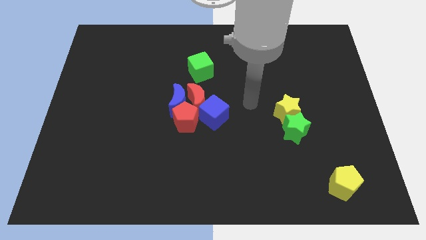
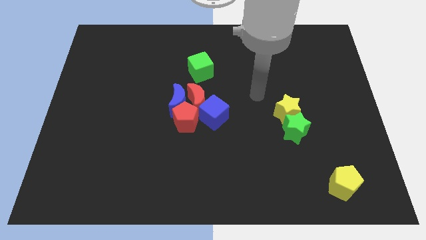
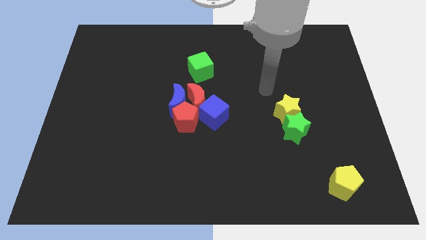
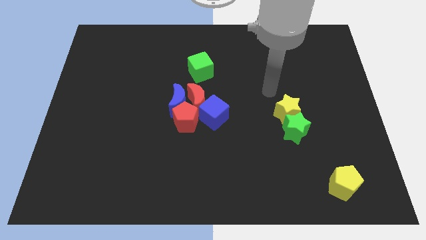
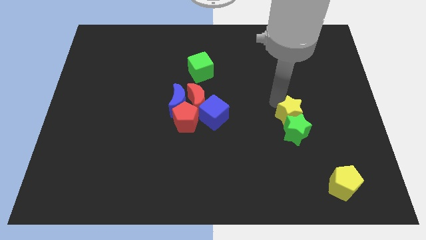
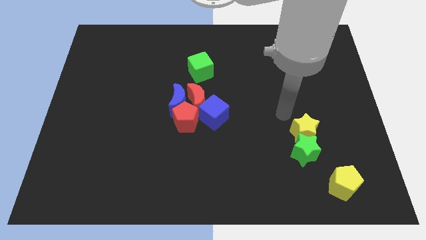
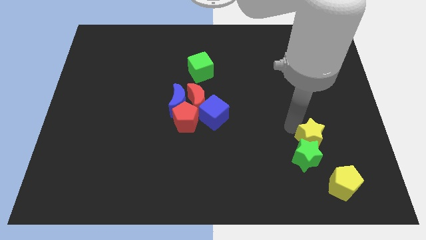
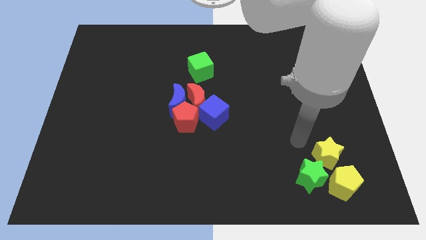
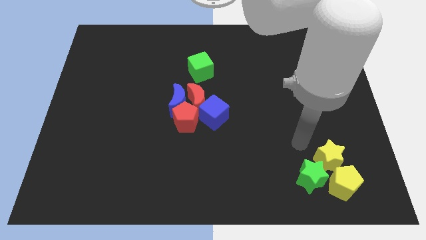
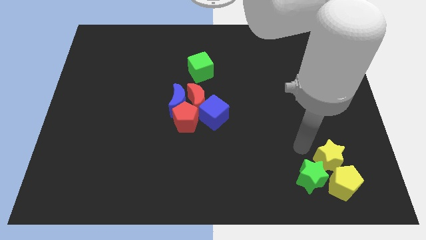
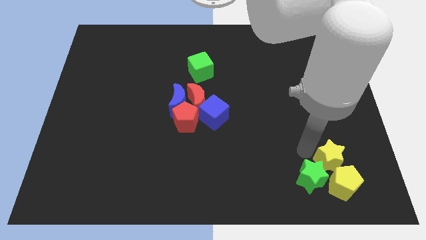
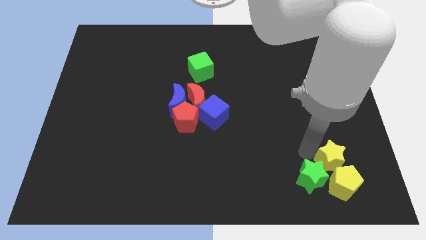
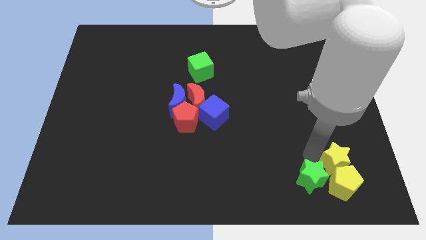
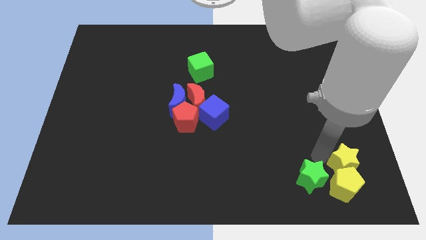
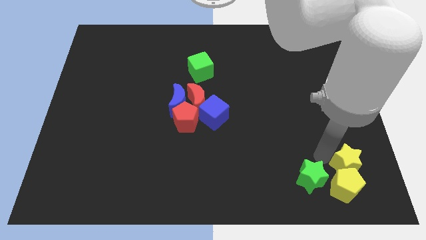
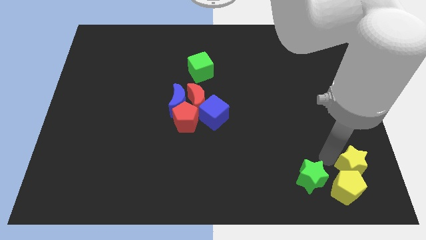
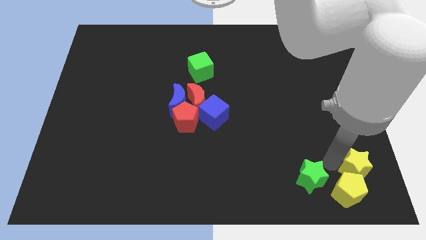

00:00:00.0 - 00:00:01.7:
separate green star and the yellow star

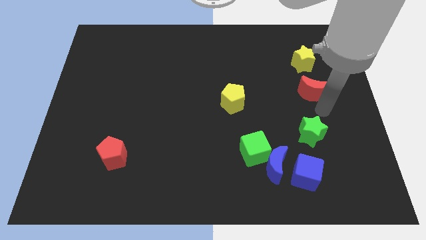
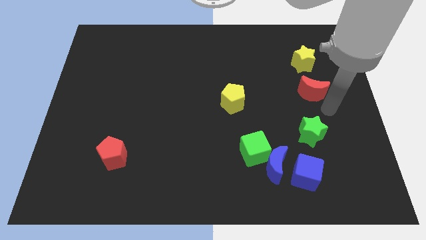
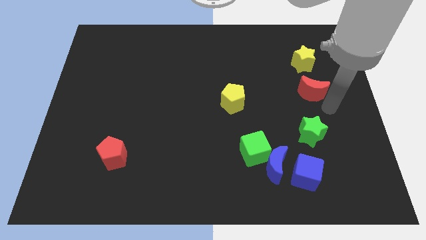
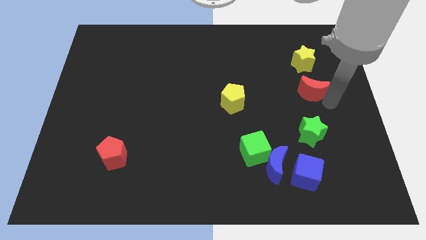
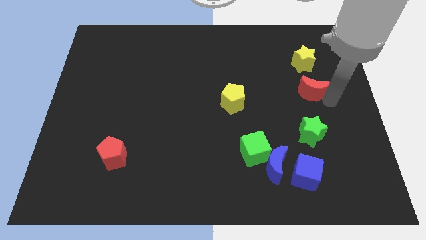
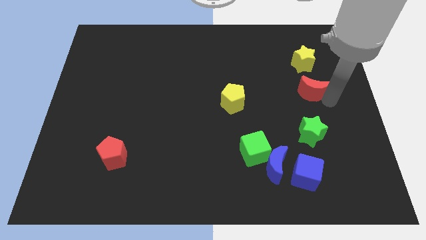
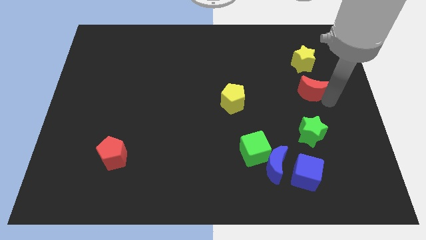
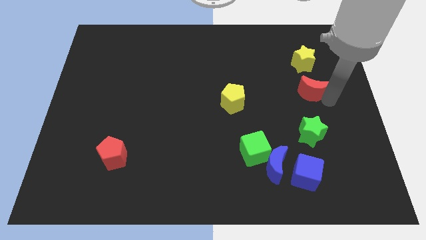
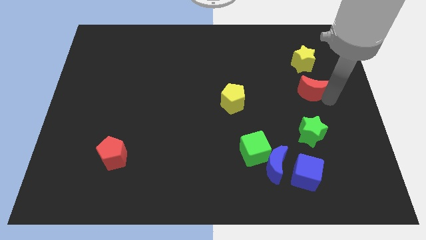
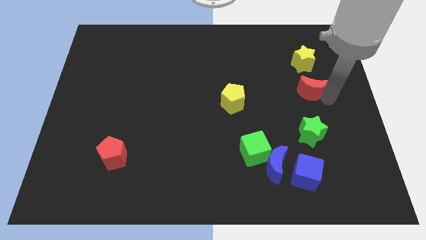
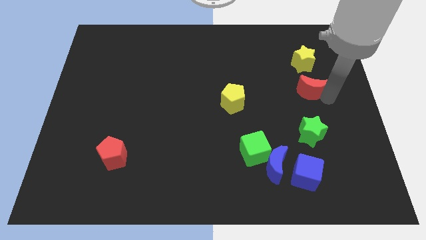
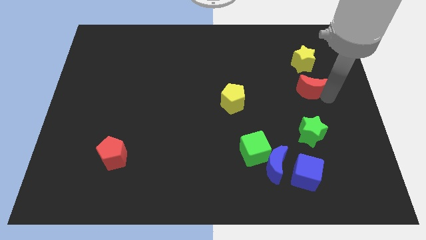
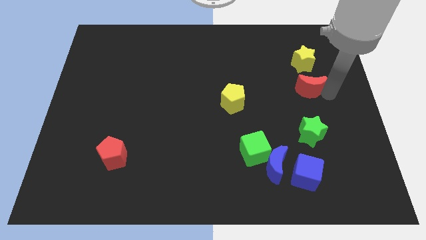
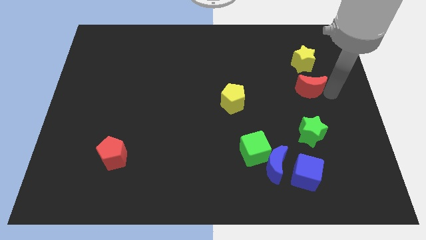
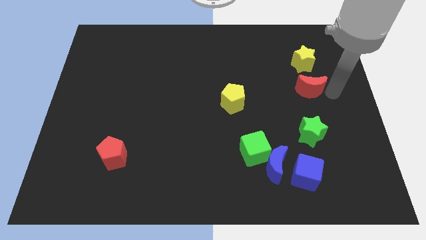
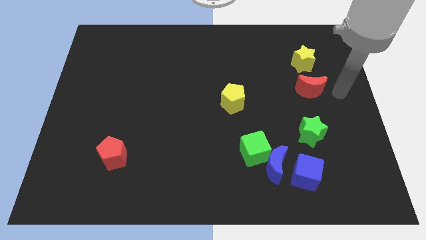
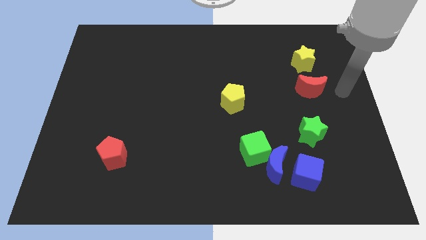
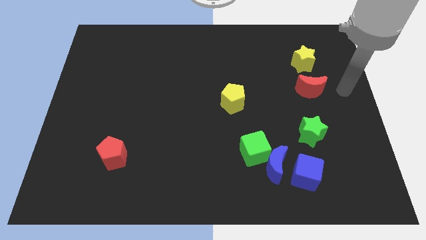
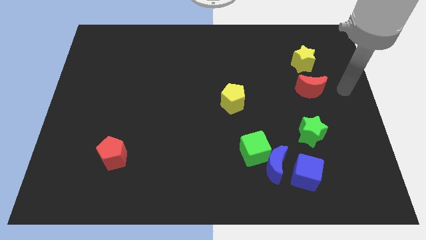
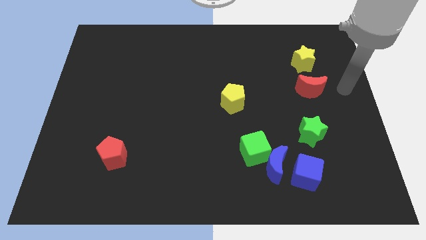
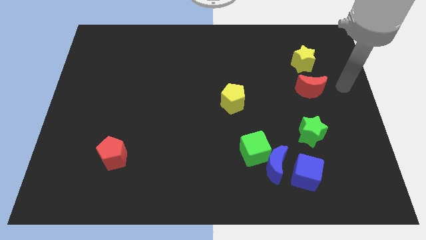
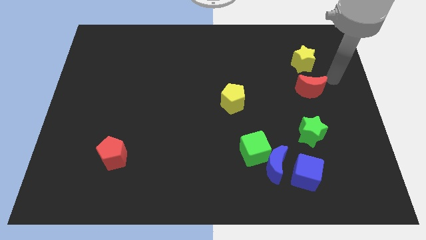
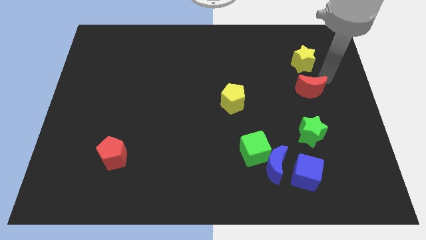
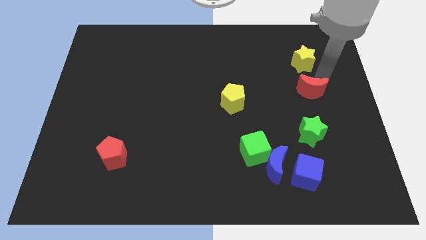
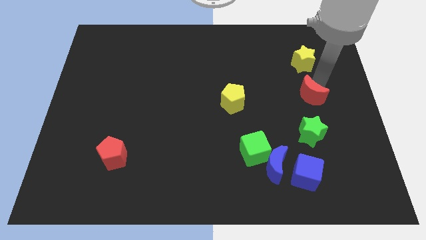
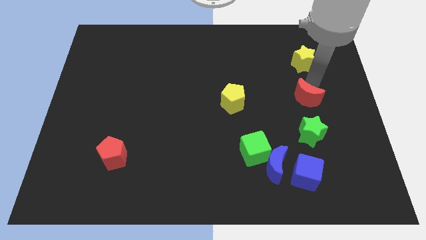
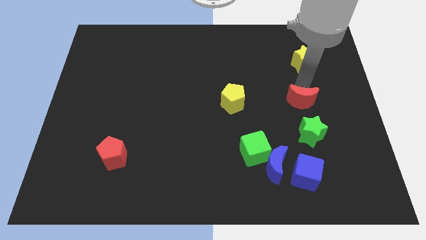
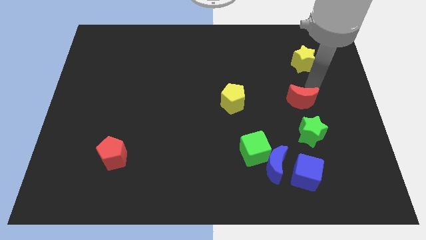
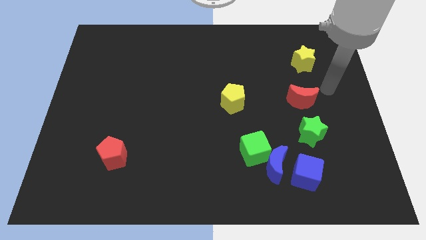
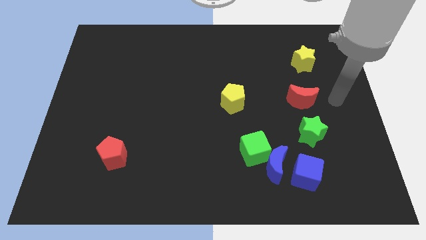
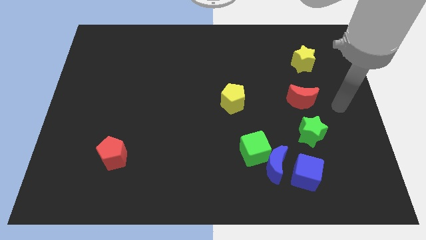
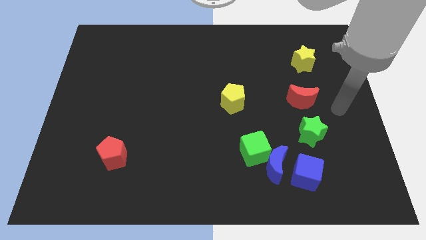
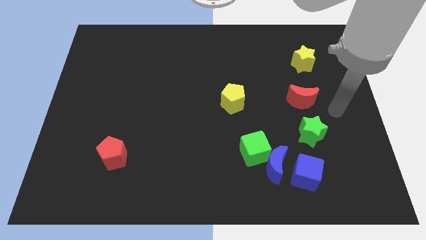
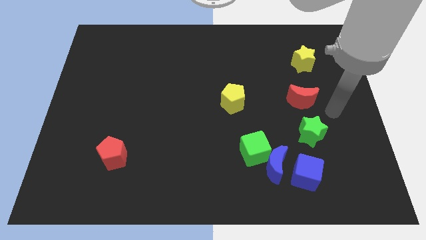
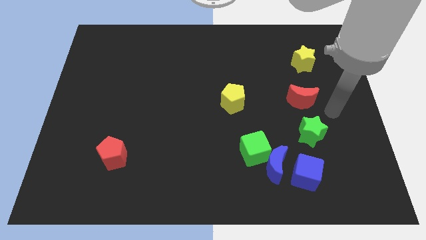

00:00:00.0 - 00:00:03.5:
slightly push red moon downwards

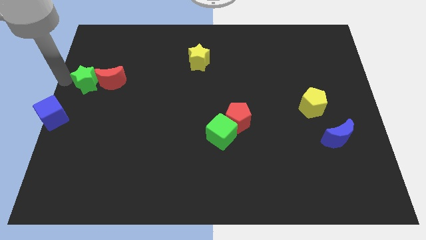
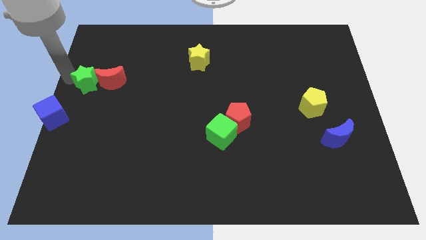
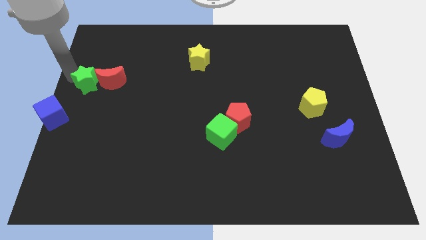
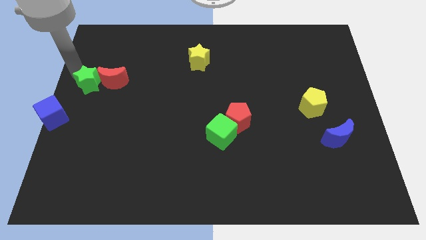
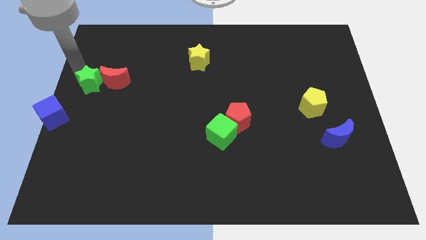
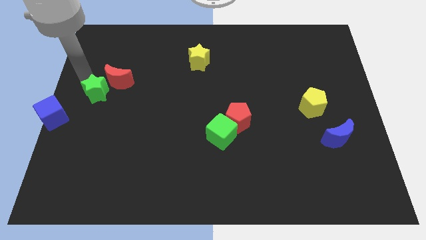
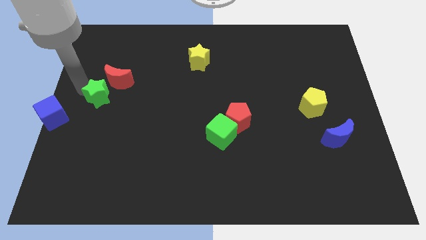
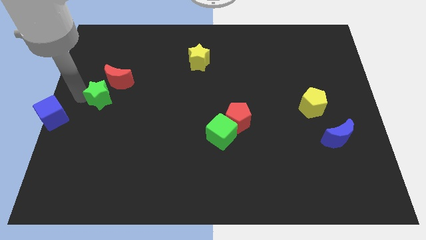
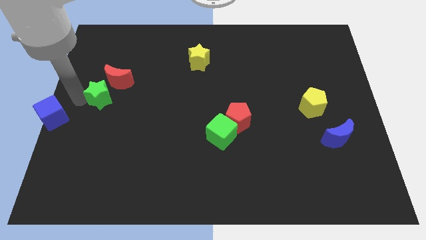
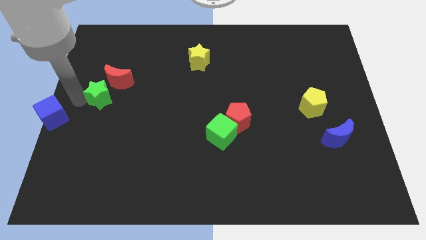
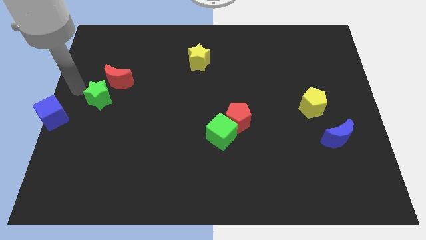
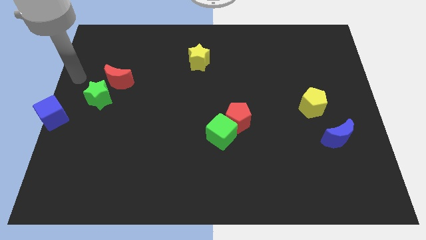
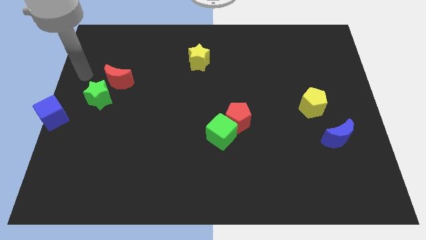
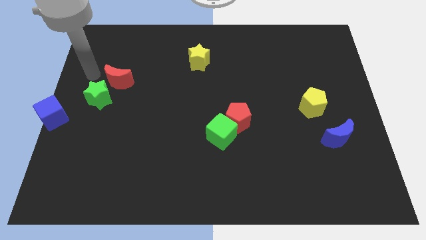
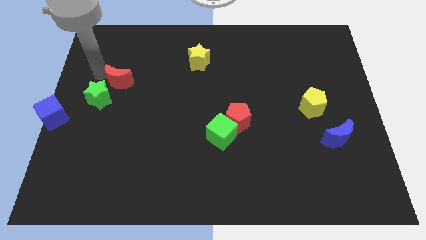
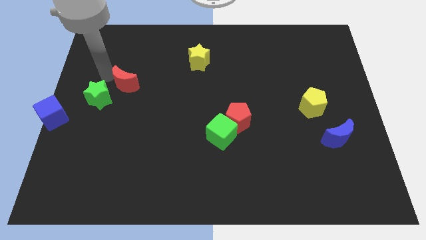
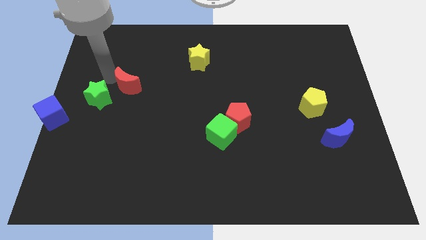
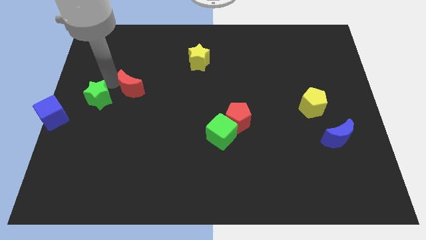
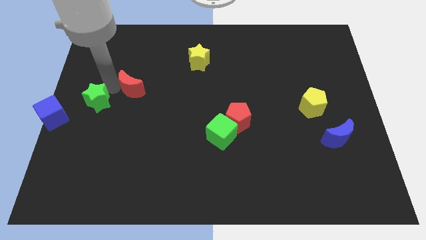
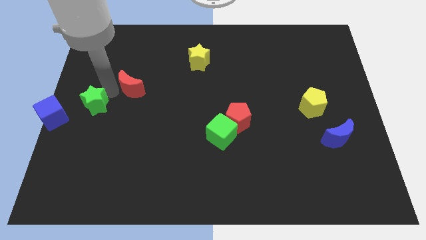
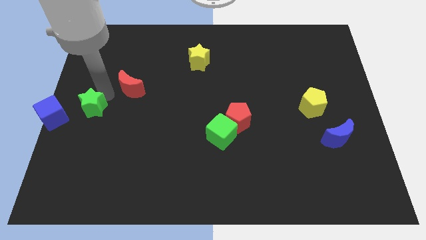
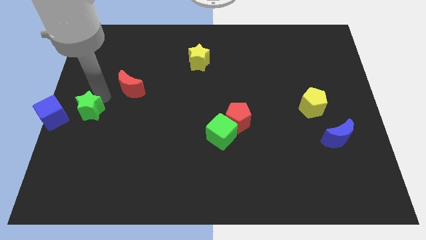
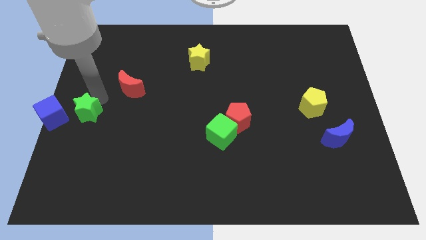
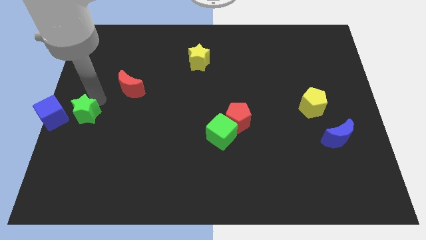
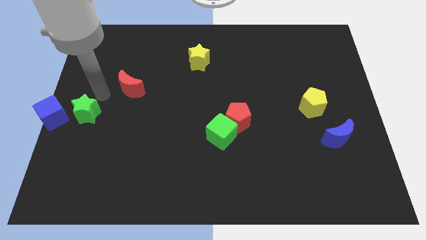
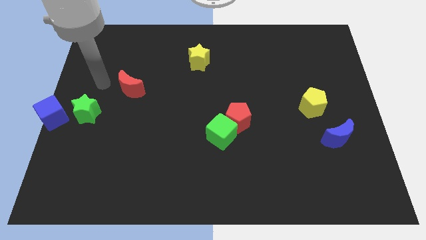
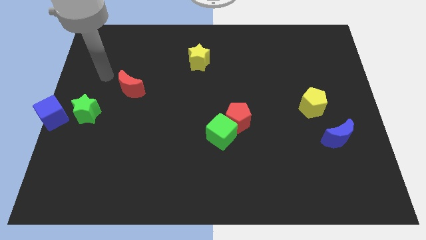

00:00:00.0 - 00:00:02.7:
move green star near blue cube

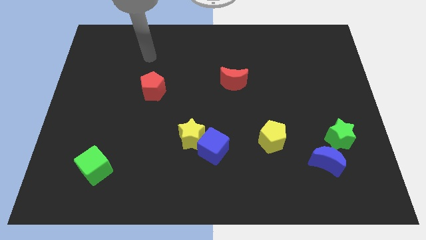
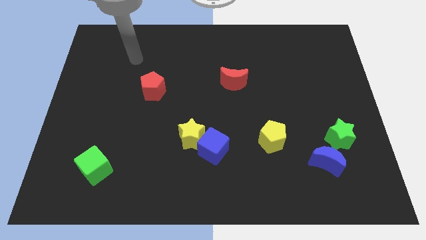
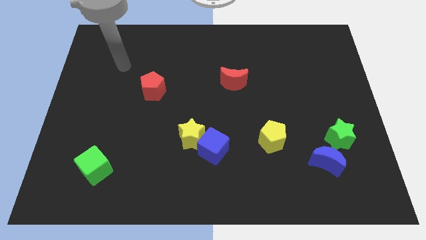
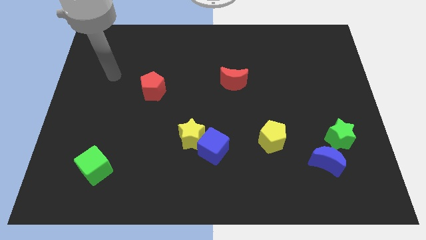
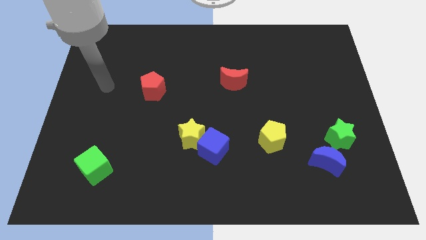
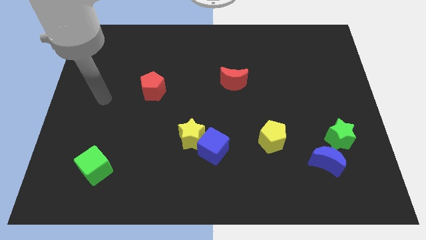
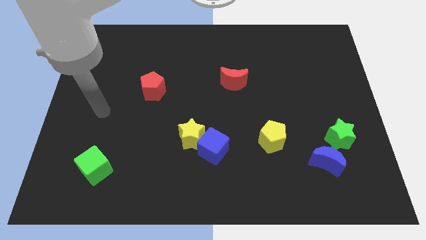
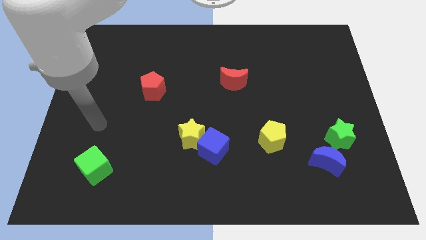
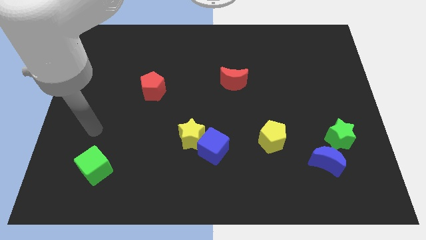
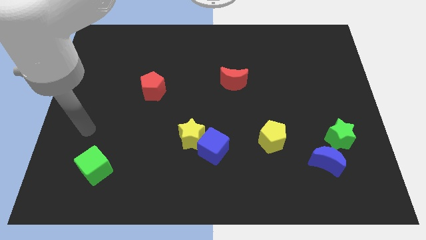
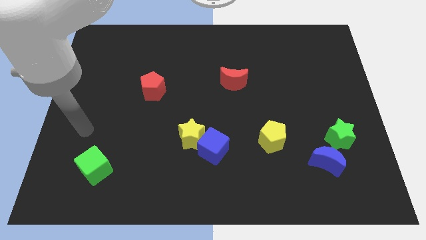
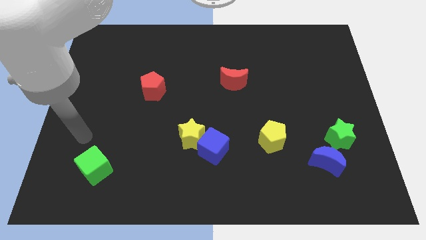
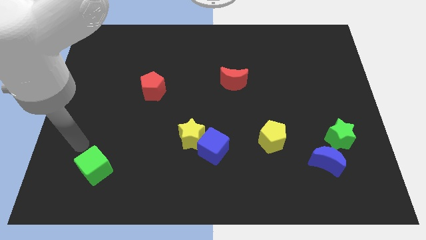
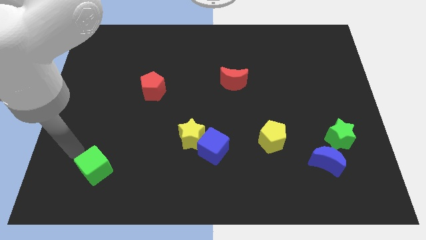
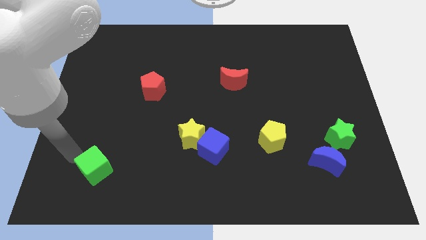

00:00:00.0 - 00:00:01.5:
point the arm to the left of the green cube
